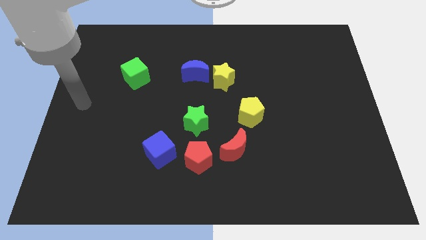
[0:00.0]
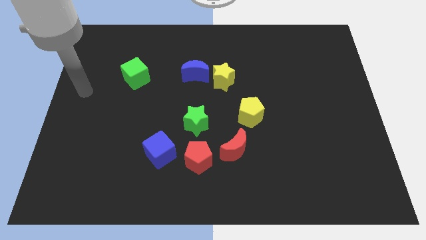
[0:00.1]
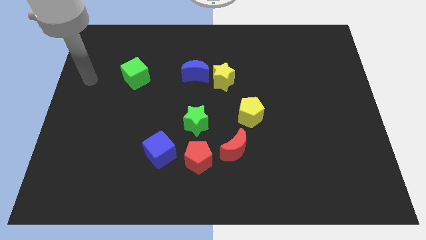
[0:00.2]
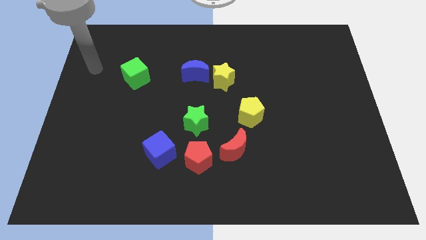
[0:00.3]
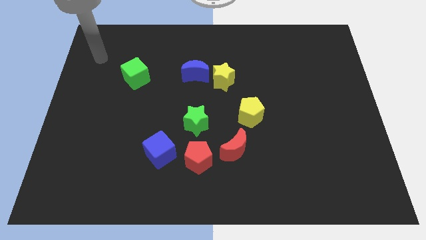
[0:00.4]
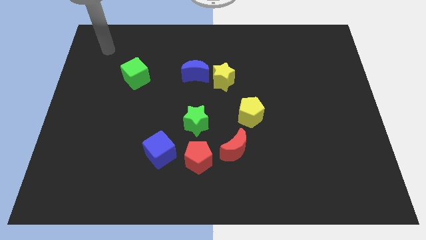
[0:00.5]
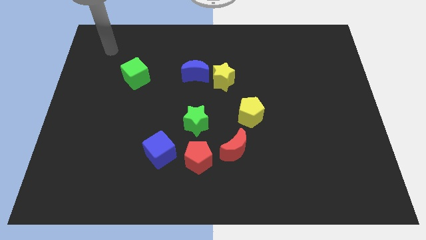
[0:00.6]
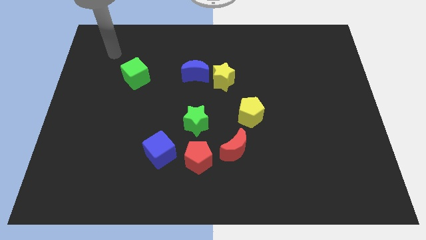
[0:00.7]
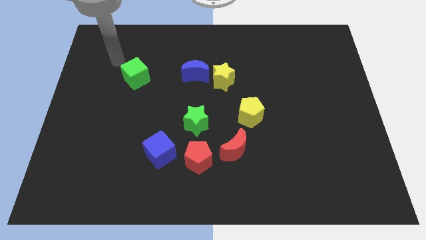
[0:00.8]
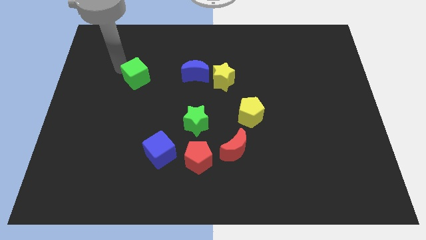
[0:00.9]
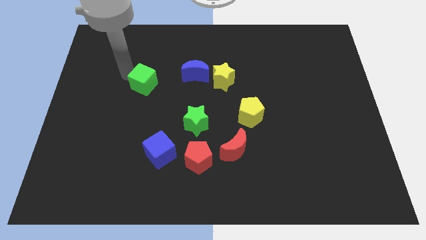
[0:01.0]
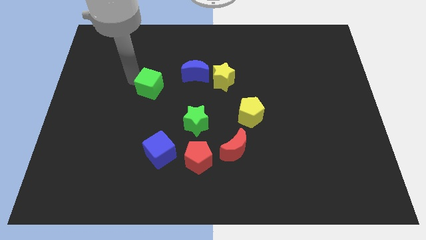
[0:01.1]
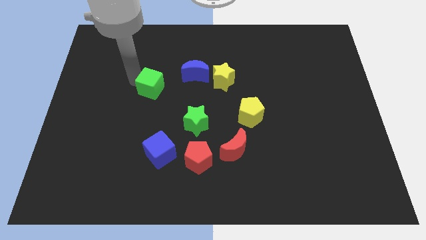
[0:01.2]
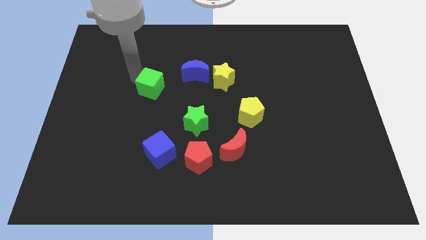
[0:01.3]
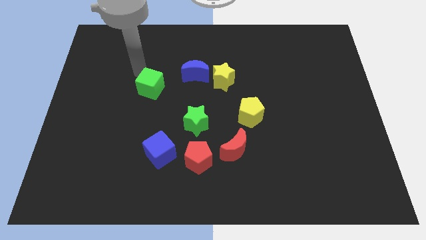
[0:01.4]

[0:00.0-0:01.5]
push the green cube towards the green star

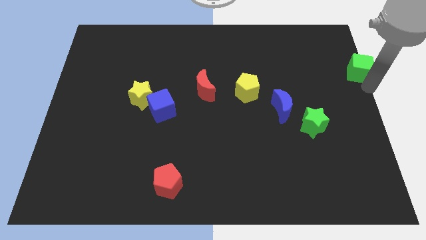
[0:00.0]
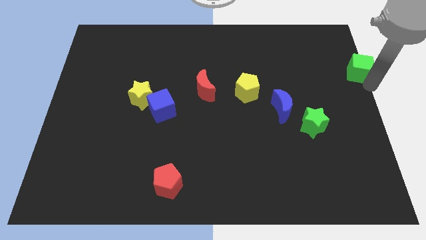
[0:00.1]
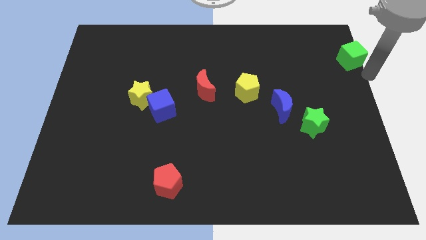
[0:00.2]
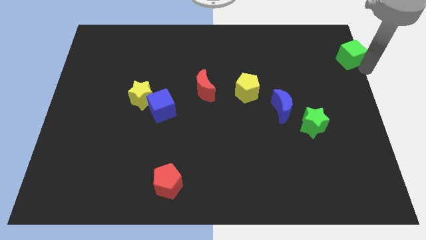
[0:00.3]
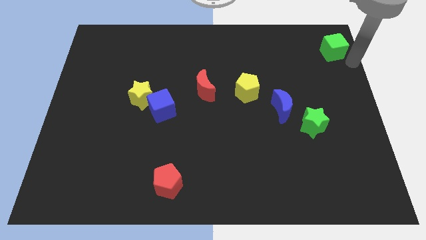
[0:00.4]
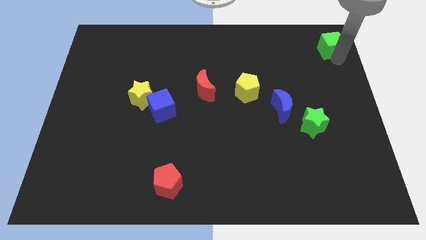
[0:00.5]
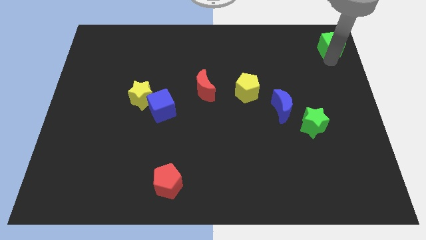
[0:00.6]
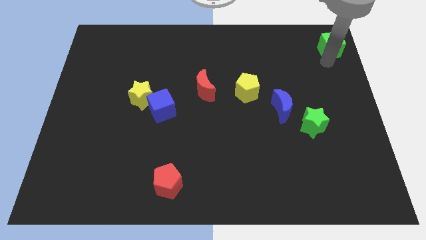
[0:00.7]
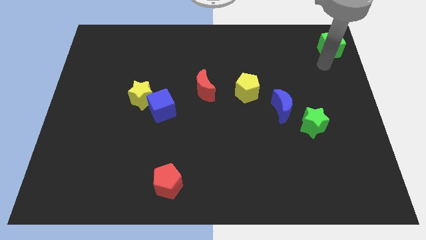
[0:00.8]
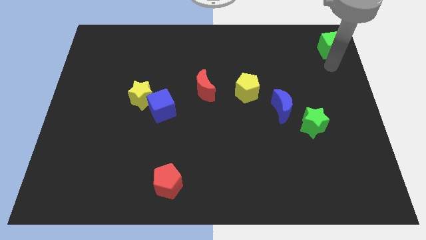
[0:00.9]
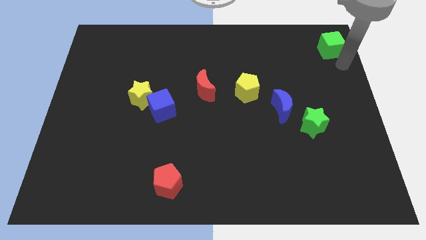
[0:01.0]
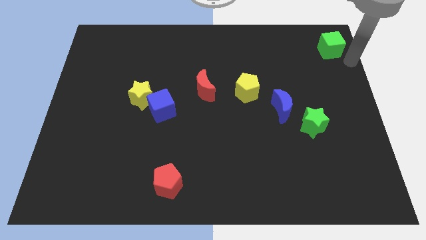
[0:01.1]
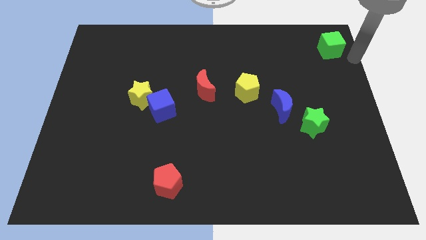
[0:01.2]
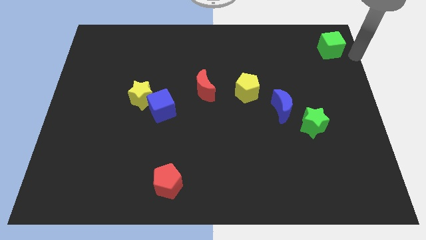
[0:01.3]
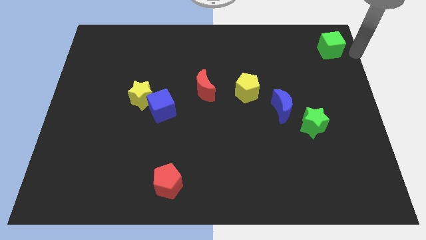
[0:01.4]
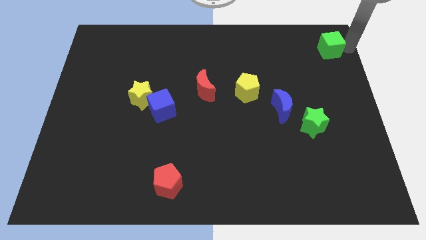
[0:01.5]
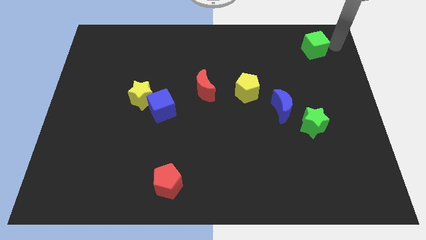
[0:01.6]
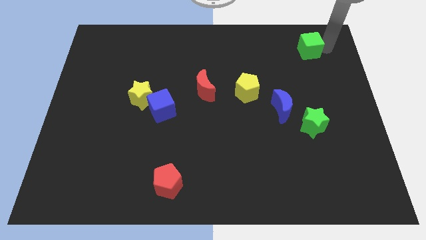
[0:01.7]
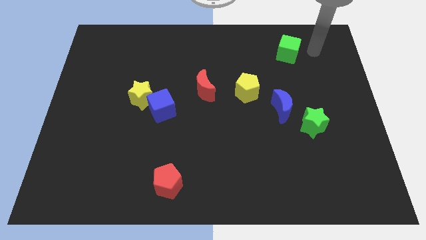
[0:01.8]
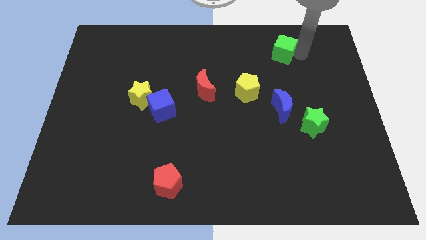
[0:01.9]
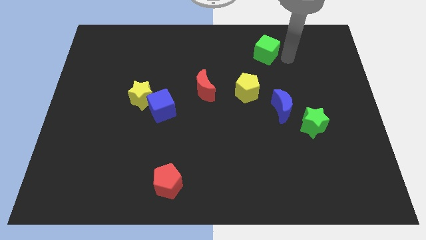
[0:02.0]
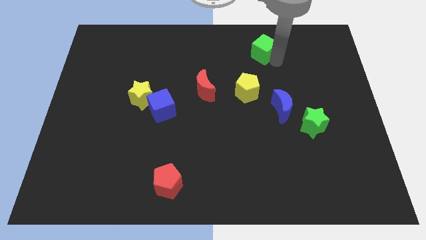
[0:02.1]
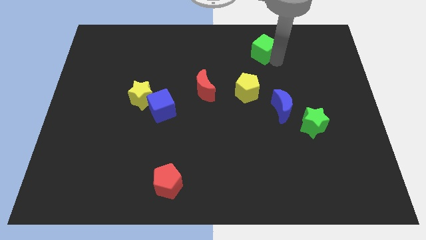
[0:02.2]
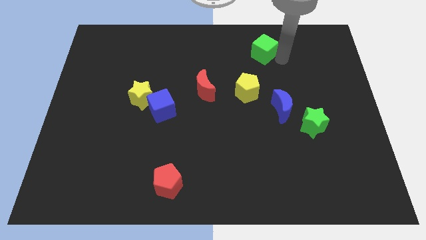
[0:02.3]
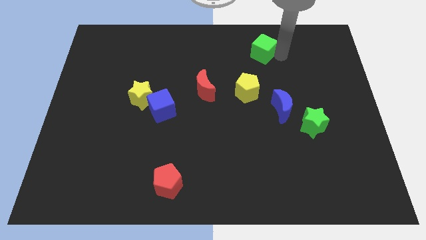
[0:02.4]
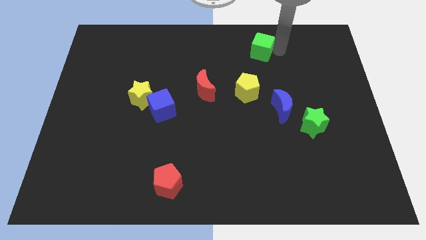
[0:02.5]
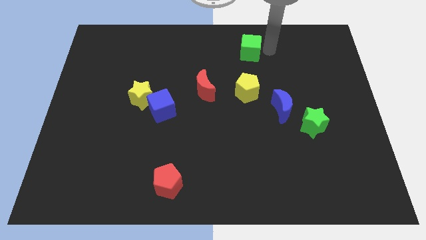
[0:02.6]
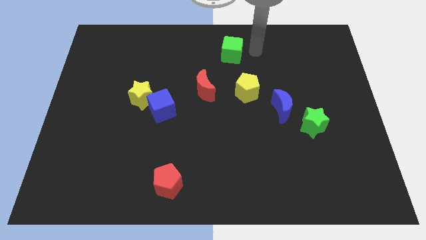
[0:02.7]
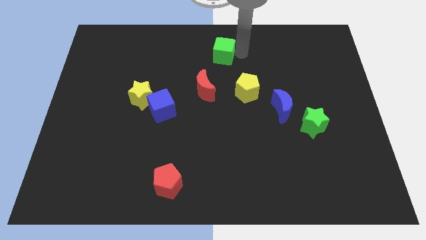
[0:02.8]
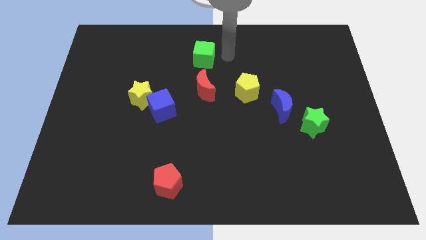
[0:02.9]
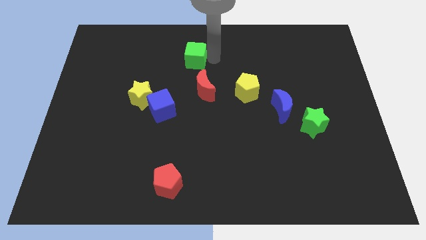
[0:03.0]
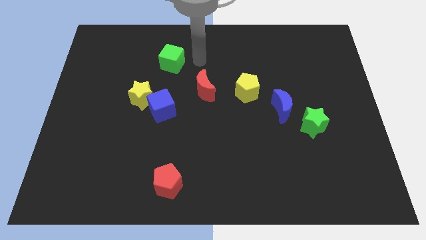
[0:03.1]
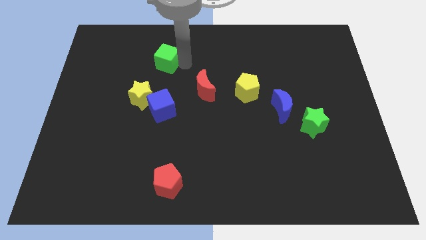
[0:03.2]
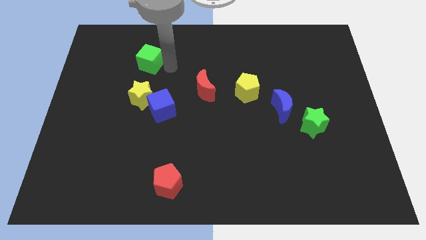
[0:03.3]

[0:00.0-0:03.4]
push the green cube to the top of the yellow star

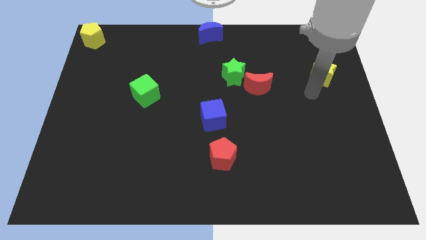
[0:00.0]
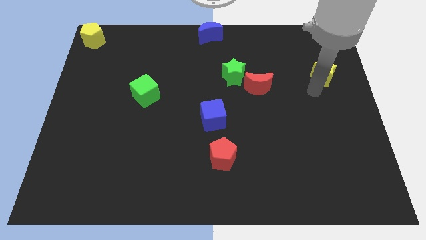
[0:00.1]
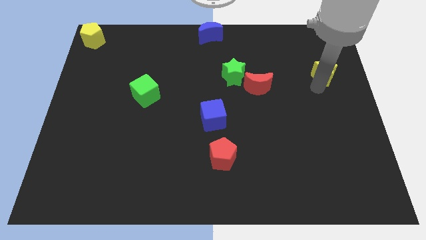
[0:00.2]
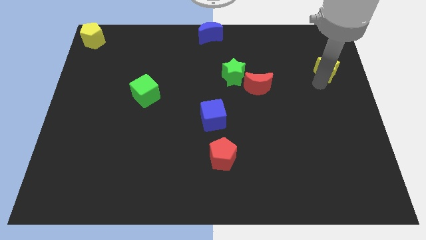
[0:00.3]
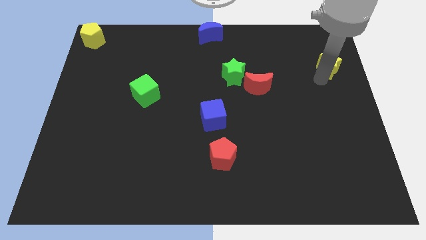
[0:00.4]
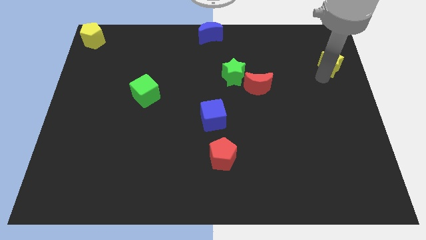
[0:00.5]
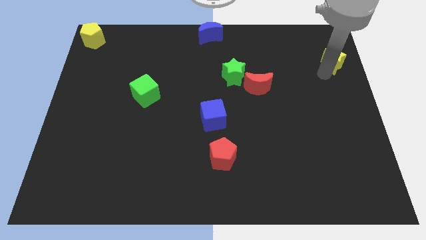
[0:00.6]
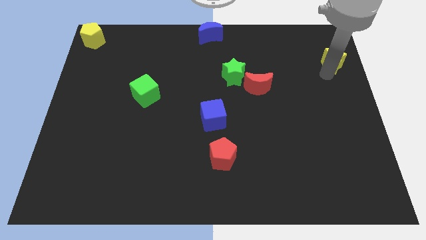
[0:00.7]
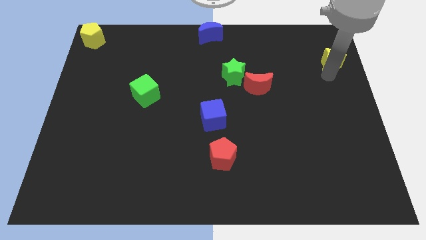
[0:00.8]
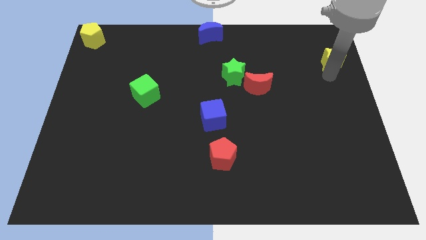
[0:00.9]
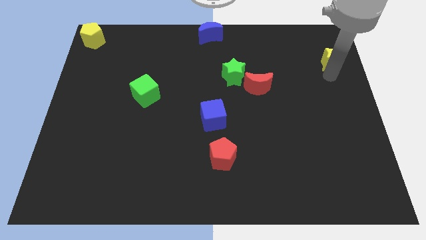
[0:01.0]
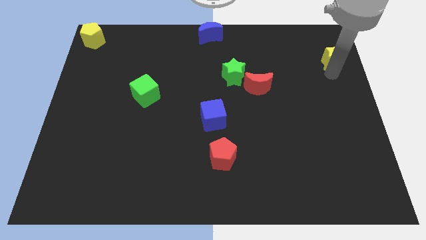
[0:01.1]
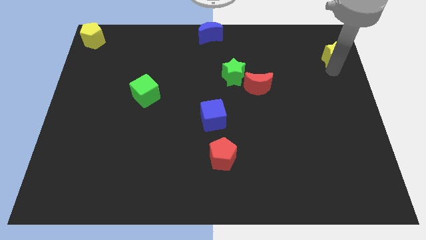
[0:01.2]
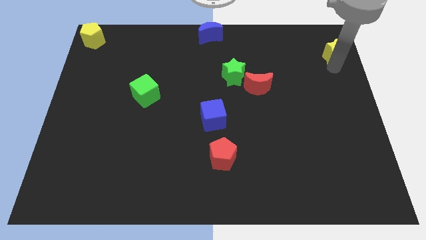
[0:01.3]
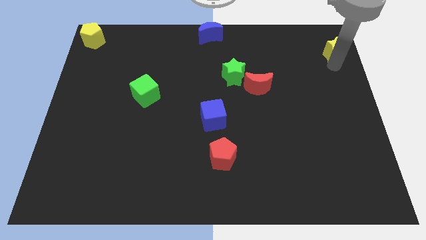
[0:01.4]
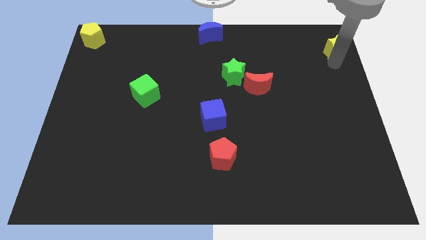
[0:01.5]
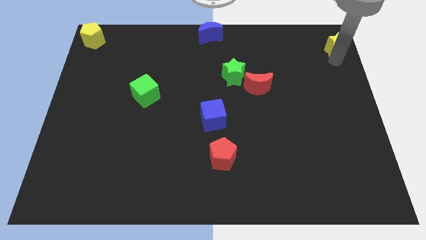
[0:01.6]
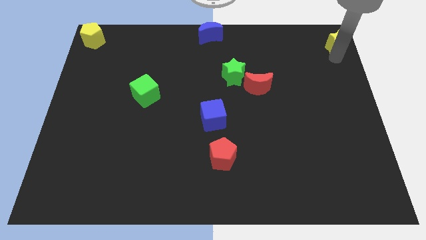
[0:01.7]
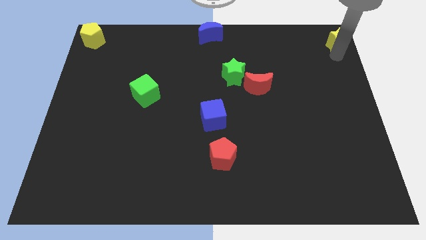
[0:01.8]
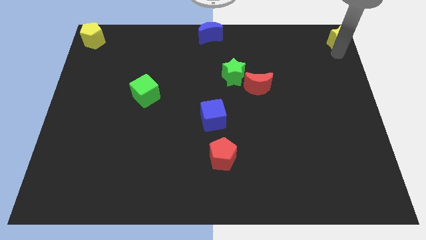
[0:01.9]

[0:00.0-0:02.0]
push the yellow star towards the top right side of the board

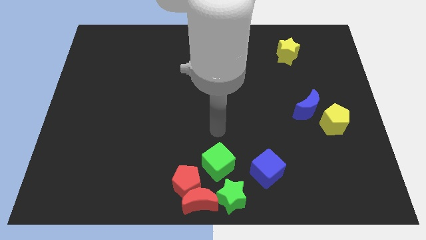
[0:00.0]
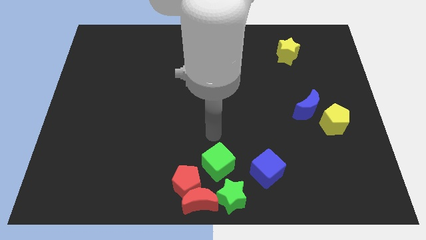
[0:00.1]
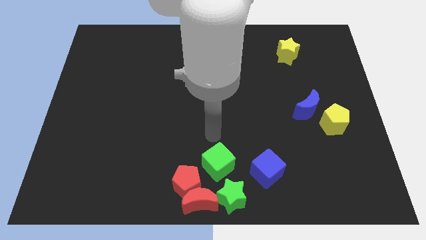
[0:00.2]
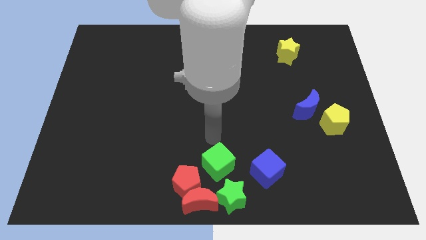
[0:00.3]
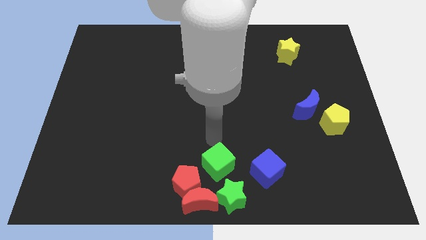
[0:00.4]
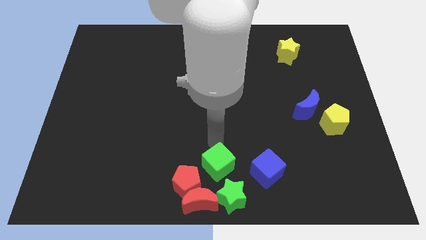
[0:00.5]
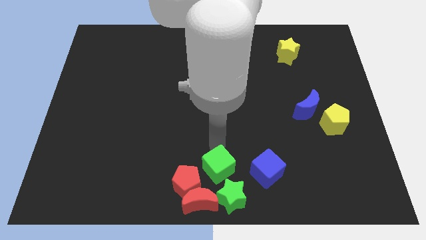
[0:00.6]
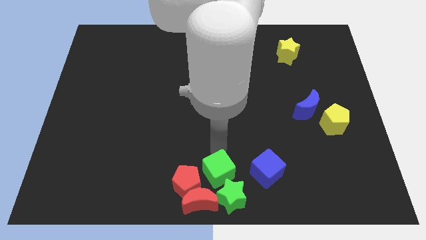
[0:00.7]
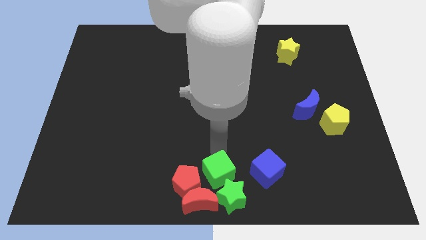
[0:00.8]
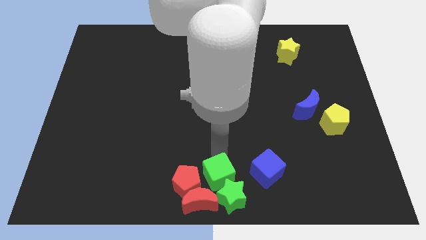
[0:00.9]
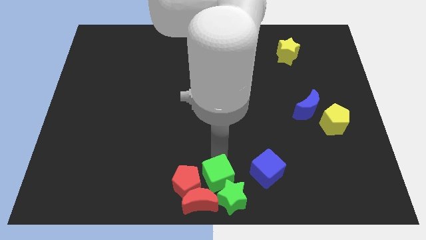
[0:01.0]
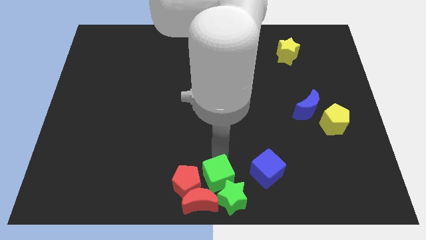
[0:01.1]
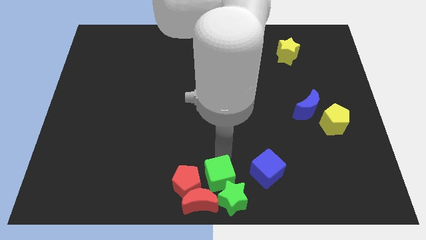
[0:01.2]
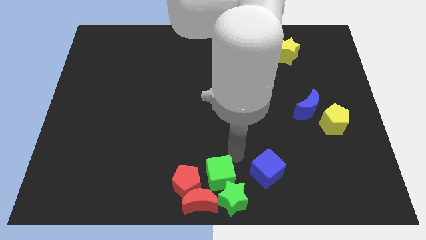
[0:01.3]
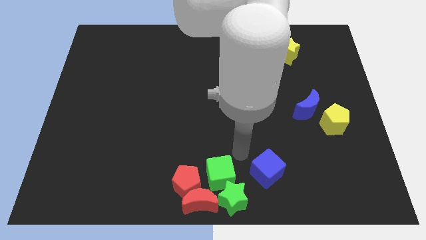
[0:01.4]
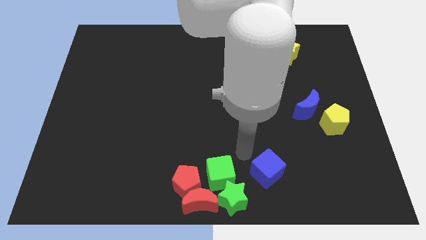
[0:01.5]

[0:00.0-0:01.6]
push the green cube into green star

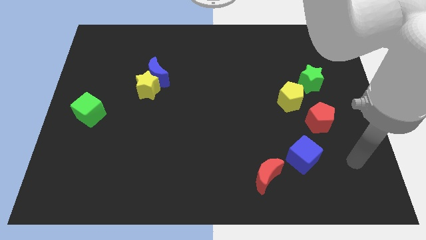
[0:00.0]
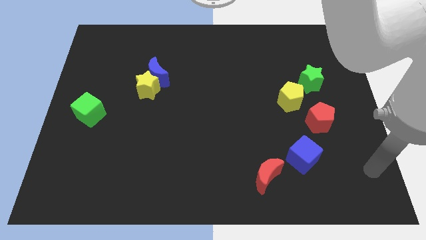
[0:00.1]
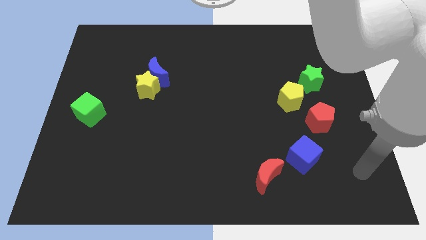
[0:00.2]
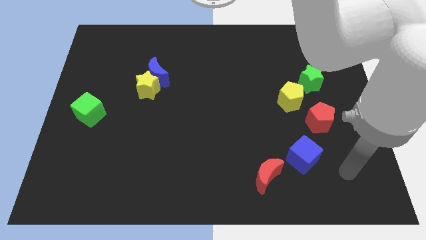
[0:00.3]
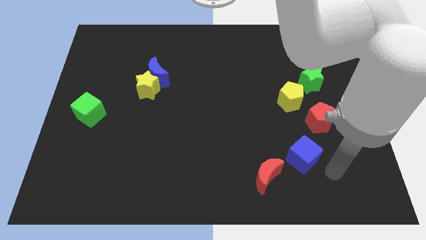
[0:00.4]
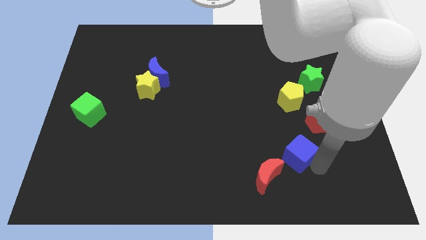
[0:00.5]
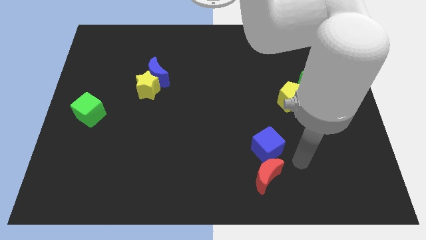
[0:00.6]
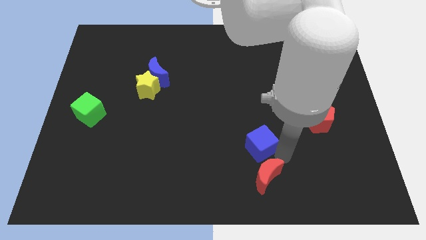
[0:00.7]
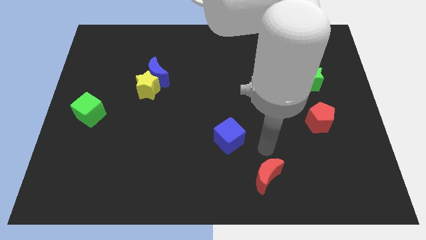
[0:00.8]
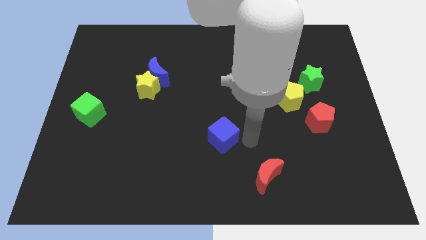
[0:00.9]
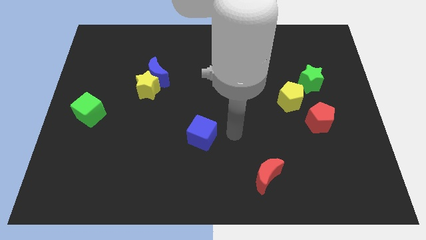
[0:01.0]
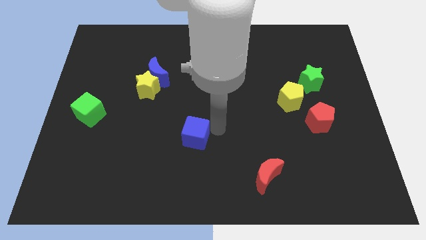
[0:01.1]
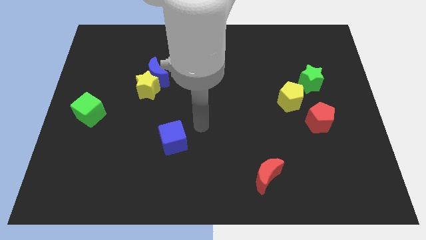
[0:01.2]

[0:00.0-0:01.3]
separate the blue cube from the red crescent
